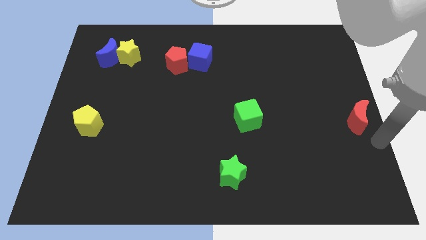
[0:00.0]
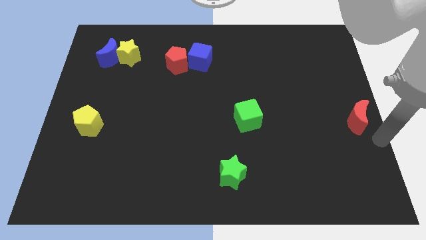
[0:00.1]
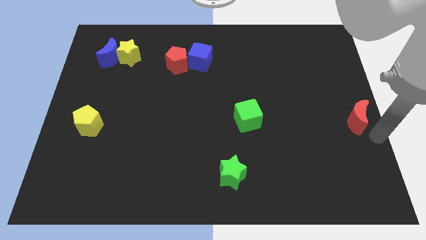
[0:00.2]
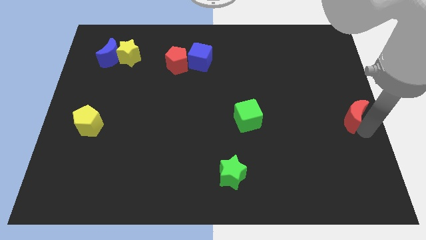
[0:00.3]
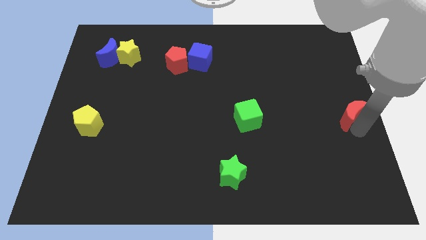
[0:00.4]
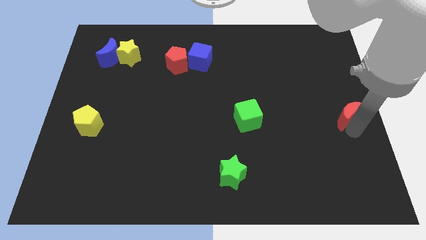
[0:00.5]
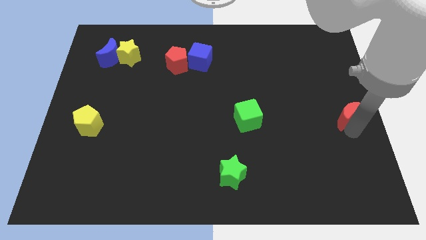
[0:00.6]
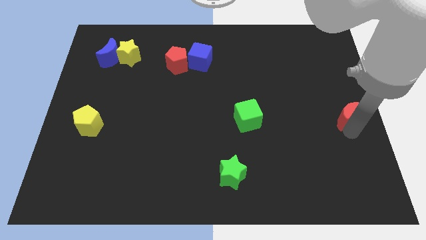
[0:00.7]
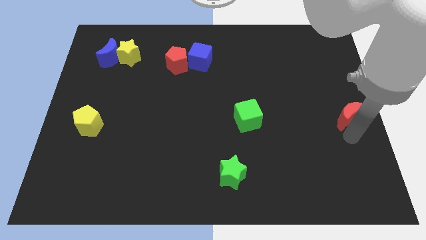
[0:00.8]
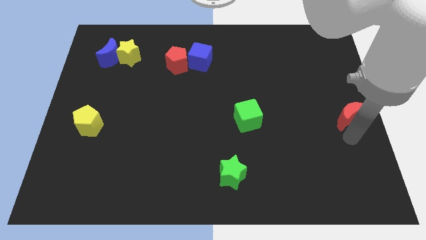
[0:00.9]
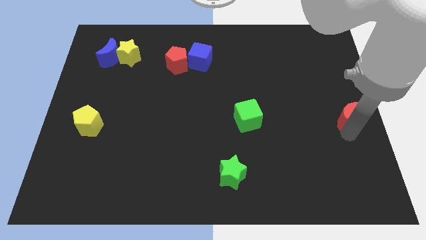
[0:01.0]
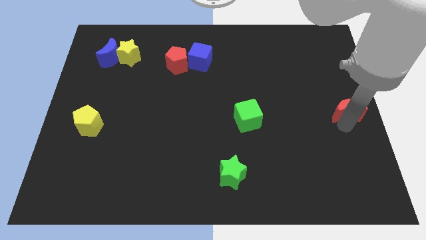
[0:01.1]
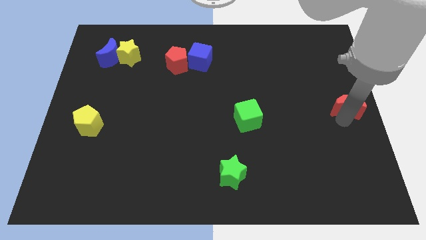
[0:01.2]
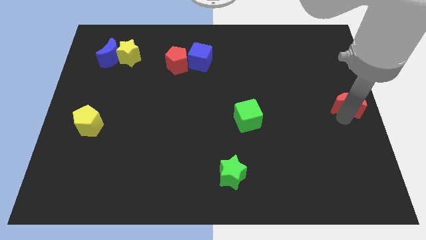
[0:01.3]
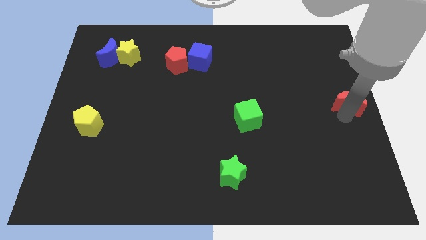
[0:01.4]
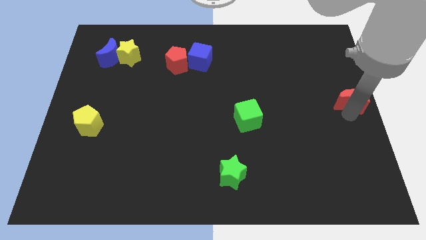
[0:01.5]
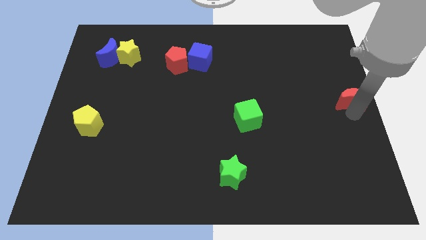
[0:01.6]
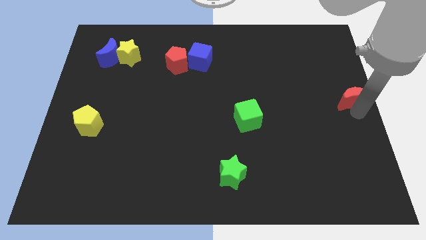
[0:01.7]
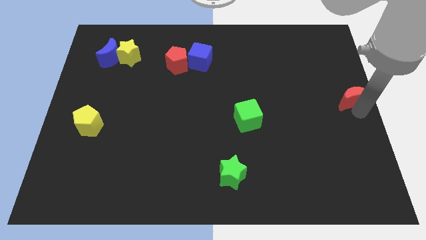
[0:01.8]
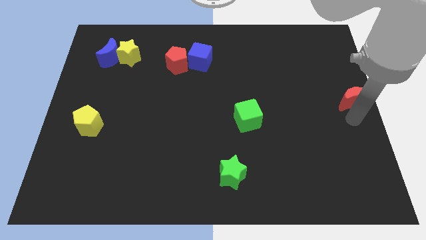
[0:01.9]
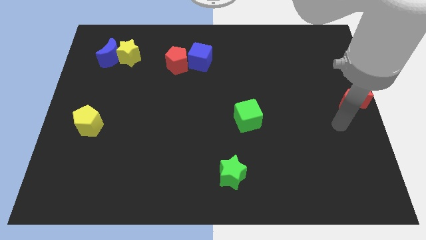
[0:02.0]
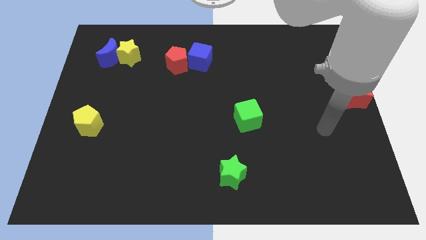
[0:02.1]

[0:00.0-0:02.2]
push the red crescent to the right center

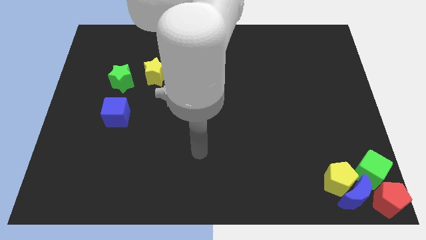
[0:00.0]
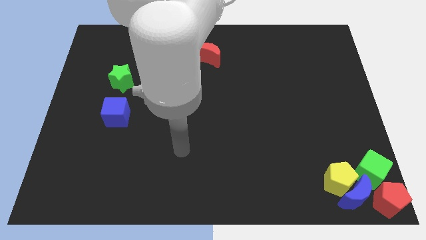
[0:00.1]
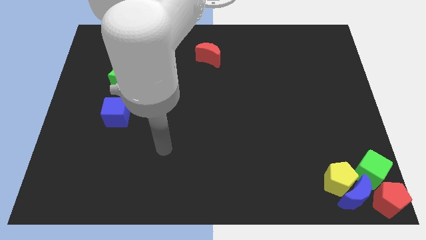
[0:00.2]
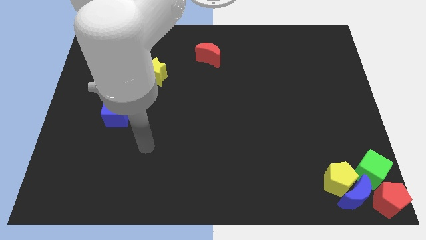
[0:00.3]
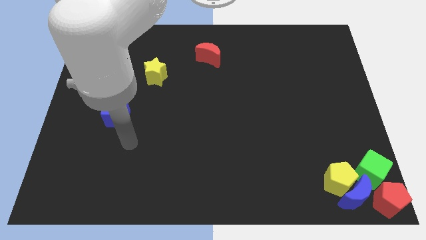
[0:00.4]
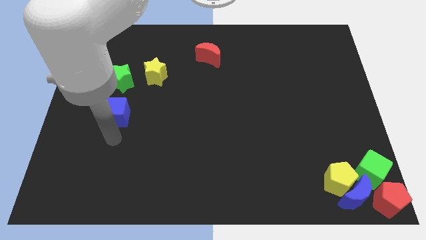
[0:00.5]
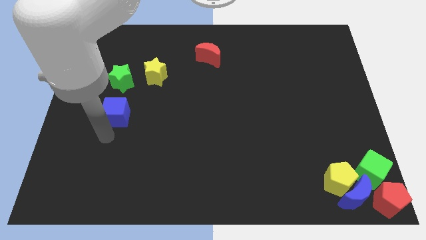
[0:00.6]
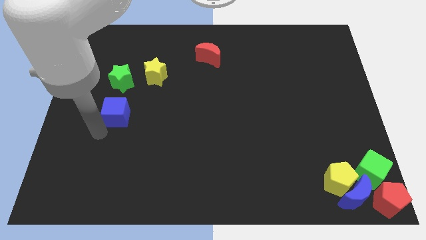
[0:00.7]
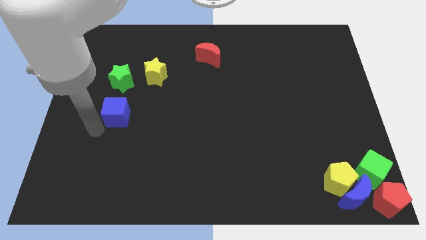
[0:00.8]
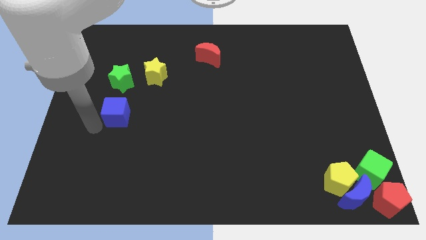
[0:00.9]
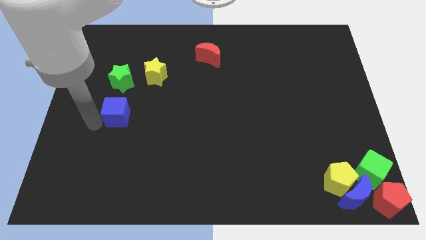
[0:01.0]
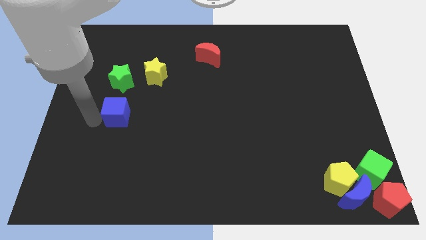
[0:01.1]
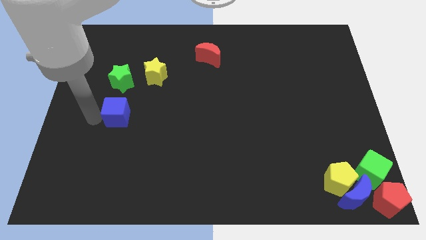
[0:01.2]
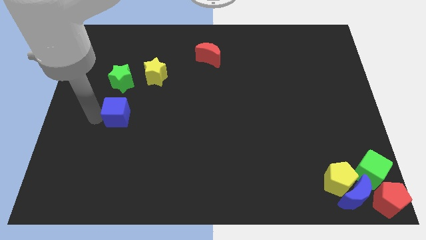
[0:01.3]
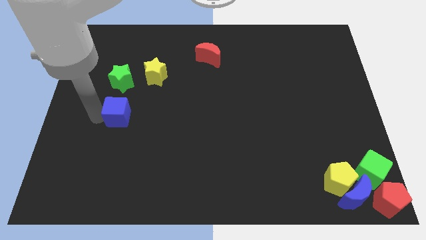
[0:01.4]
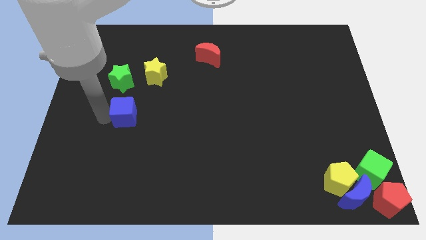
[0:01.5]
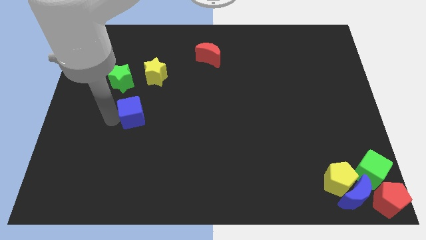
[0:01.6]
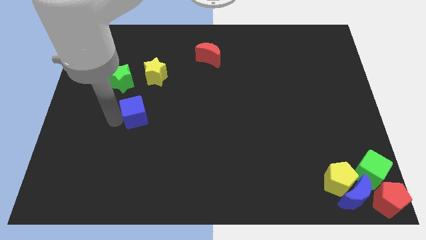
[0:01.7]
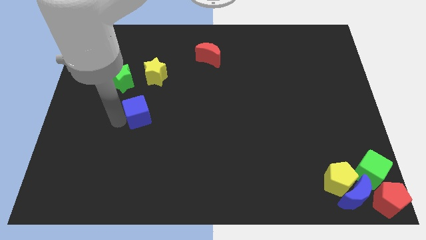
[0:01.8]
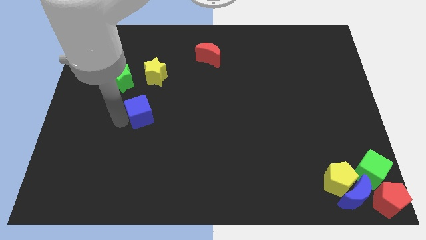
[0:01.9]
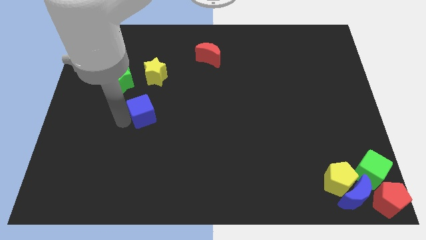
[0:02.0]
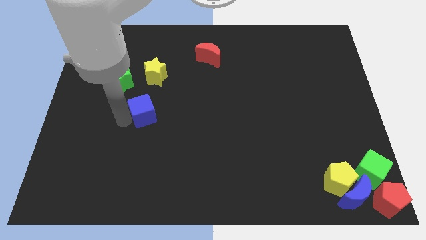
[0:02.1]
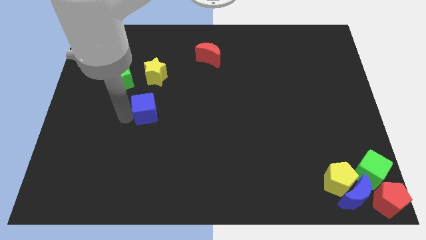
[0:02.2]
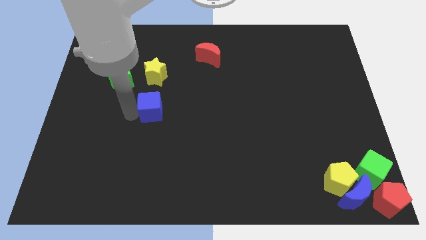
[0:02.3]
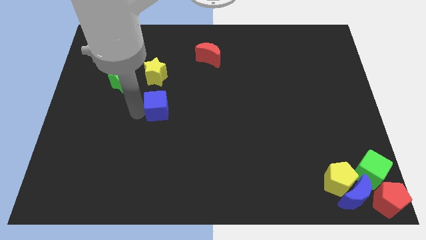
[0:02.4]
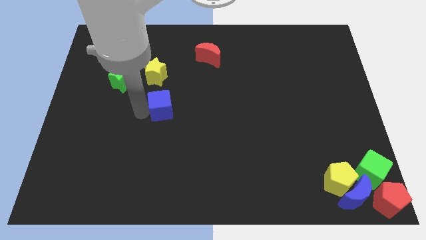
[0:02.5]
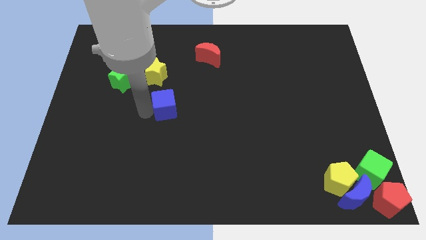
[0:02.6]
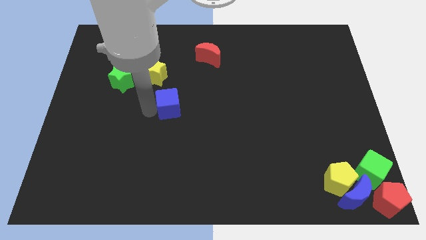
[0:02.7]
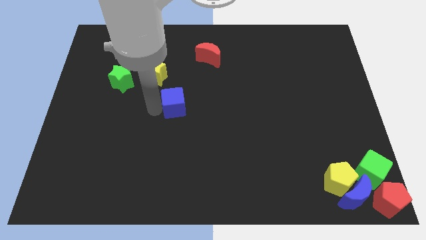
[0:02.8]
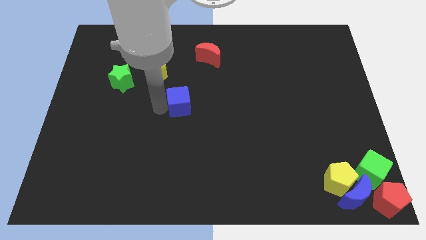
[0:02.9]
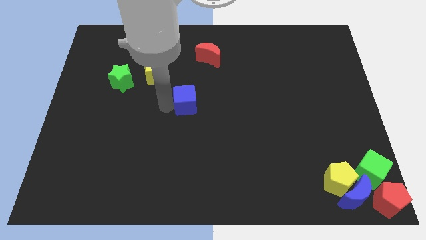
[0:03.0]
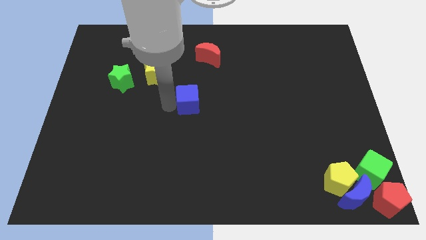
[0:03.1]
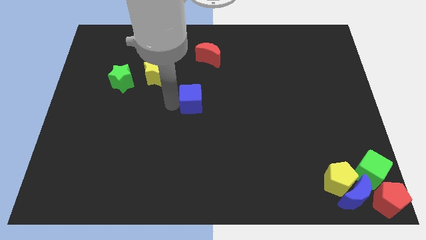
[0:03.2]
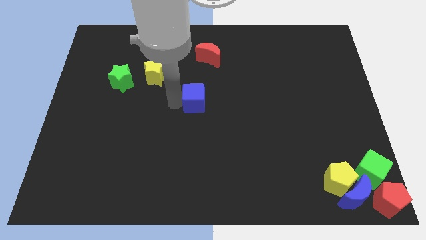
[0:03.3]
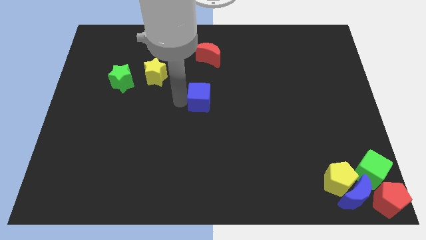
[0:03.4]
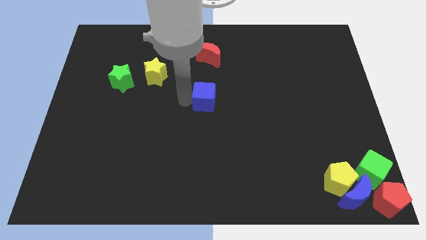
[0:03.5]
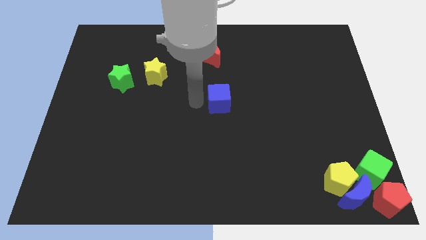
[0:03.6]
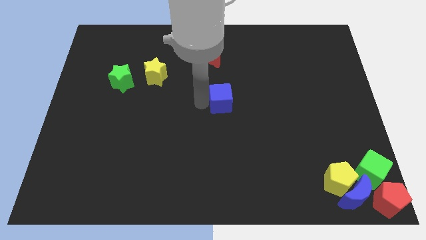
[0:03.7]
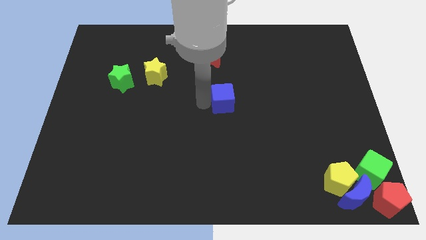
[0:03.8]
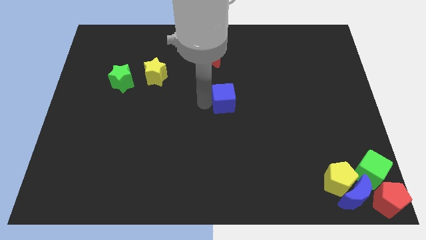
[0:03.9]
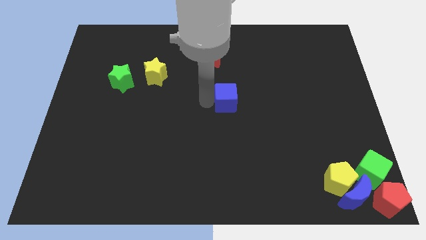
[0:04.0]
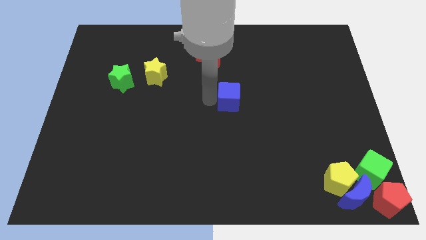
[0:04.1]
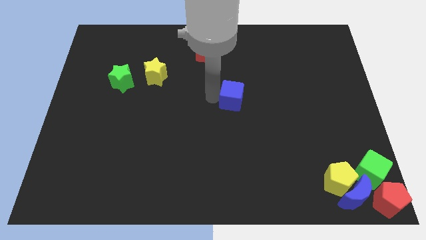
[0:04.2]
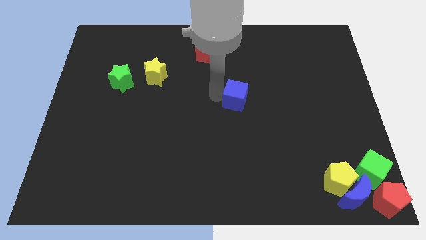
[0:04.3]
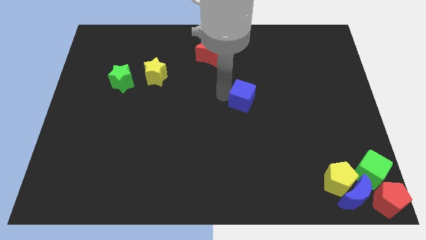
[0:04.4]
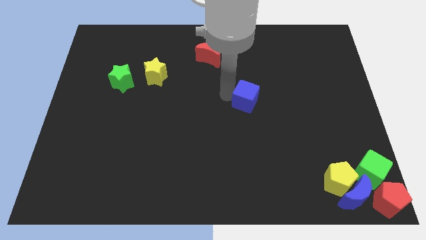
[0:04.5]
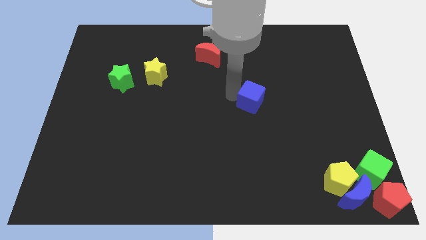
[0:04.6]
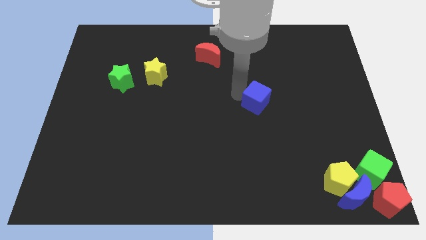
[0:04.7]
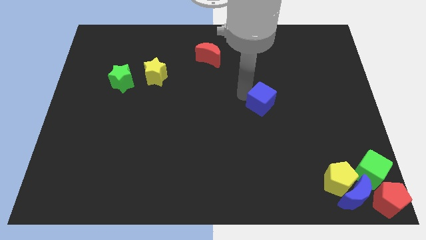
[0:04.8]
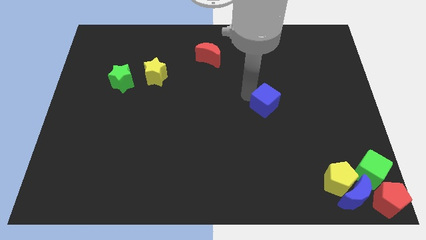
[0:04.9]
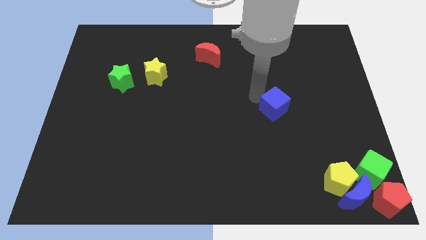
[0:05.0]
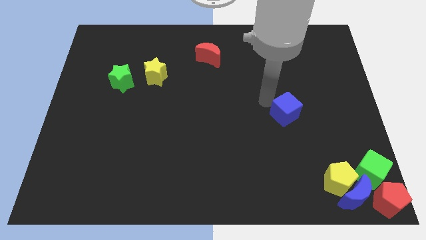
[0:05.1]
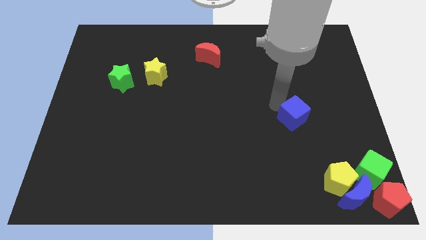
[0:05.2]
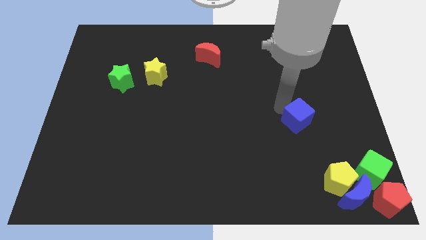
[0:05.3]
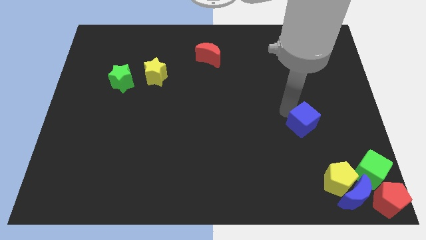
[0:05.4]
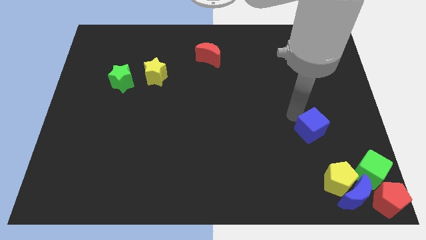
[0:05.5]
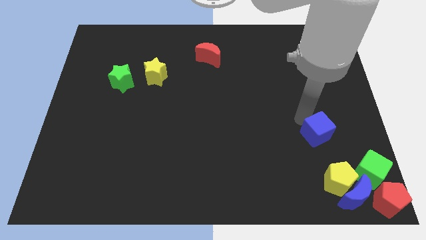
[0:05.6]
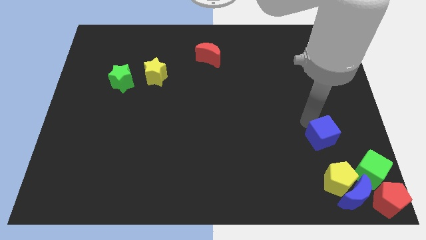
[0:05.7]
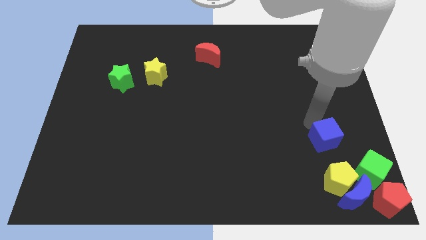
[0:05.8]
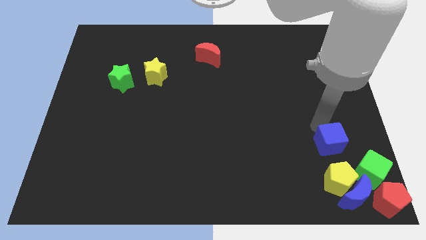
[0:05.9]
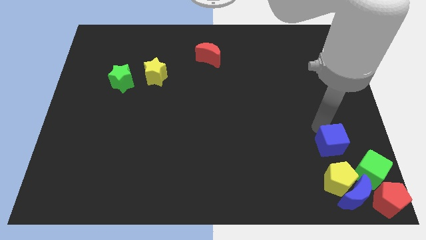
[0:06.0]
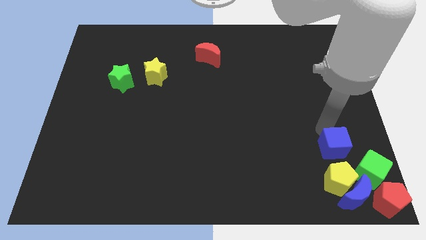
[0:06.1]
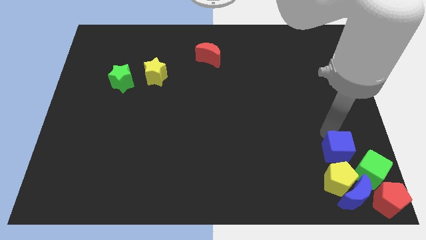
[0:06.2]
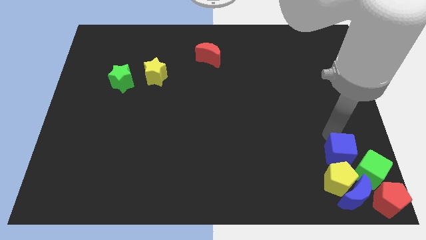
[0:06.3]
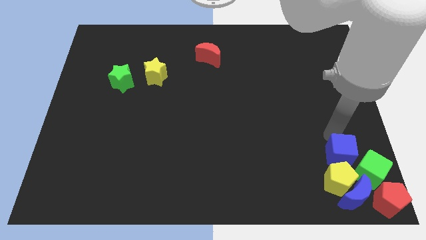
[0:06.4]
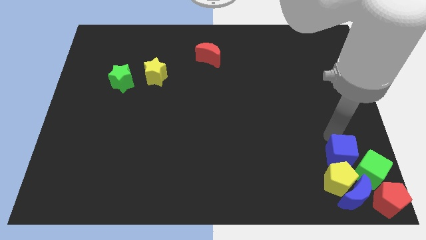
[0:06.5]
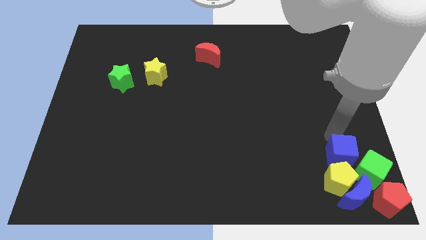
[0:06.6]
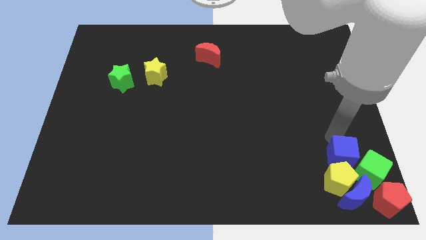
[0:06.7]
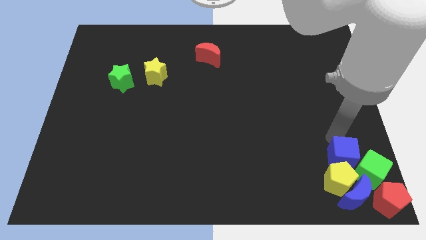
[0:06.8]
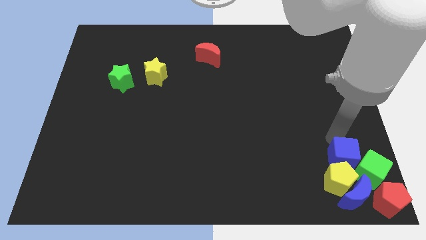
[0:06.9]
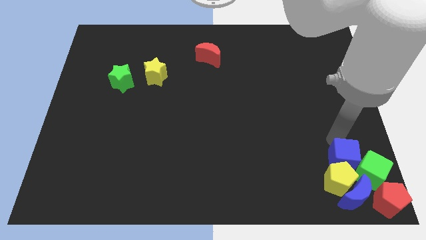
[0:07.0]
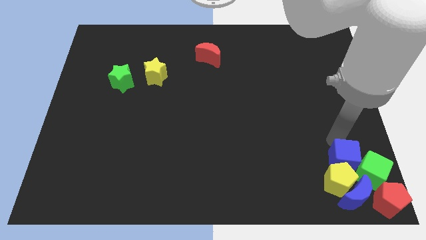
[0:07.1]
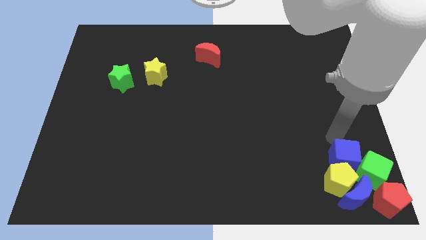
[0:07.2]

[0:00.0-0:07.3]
move the blue cube to the top of the yellow pentagon
